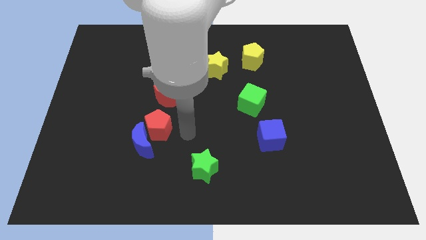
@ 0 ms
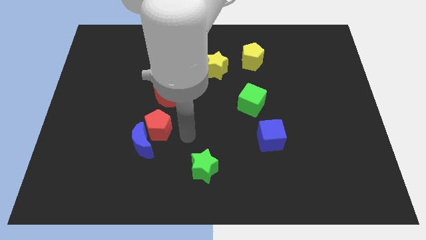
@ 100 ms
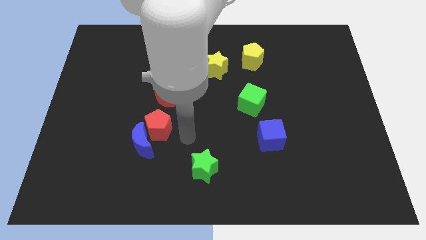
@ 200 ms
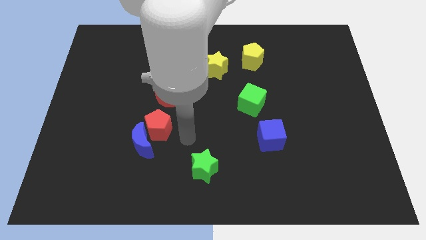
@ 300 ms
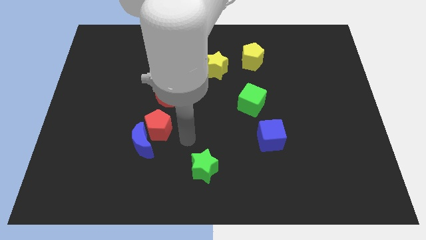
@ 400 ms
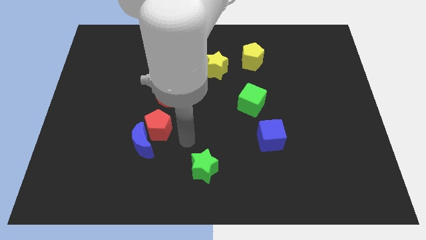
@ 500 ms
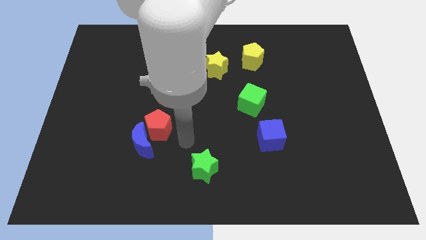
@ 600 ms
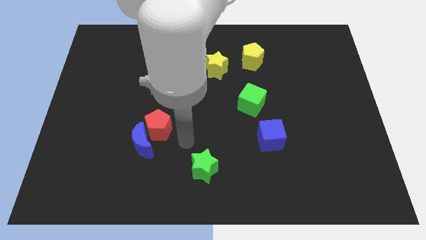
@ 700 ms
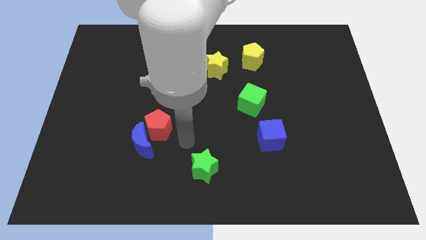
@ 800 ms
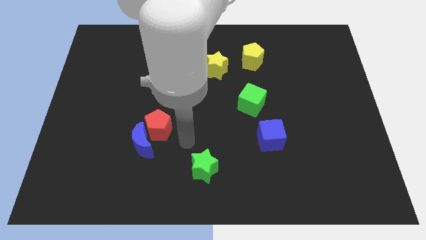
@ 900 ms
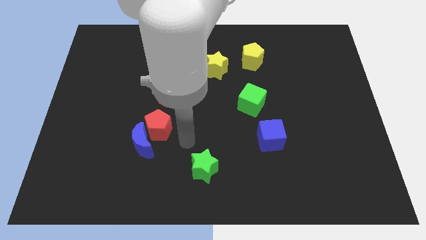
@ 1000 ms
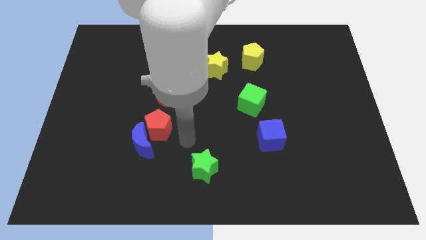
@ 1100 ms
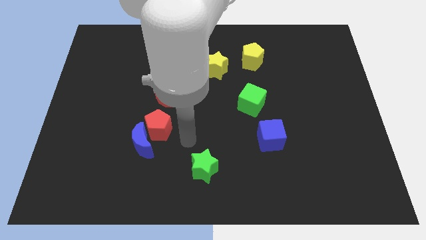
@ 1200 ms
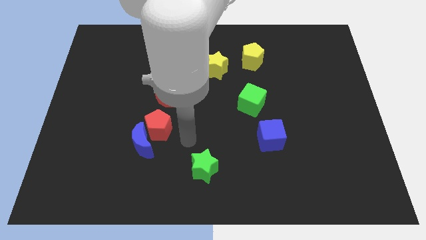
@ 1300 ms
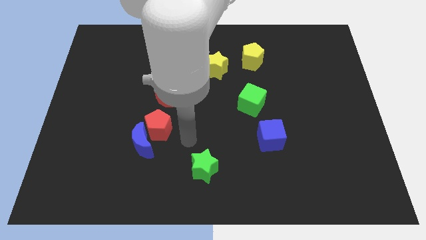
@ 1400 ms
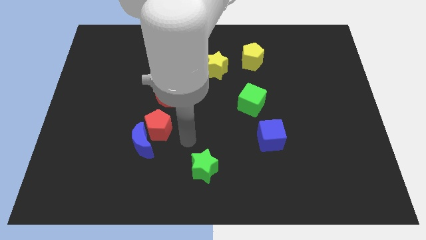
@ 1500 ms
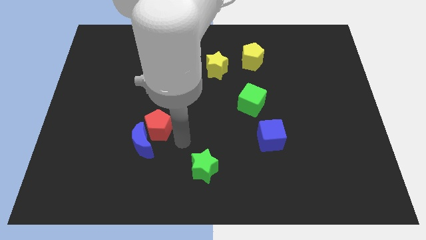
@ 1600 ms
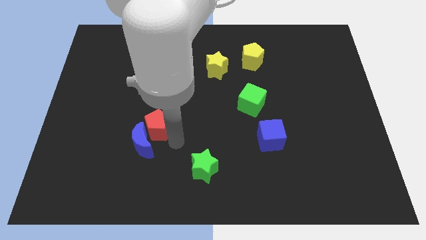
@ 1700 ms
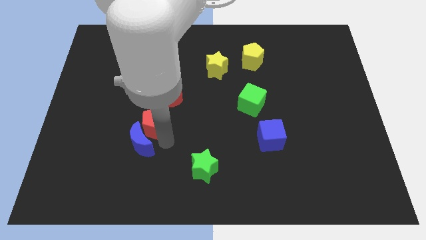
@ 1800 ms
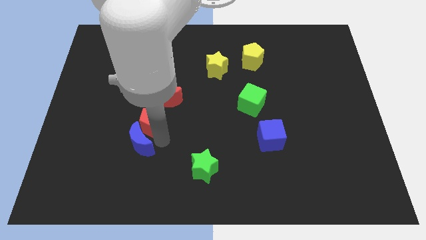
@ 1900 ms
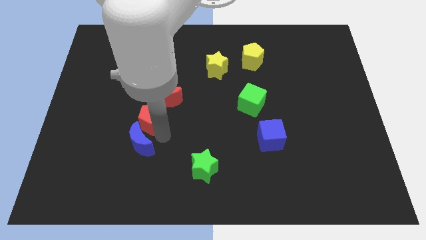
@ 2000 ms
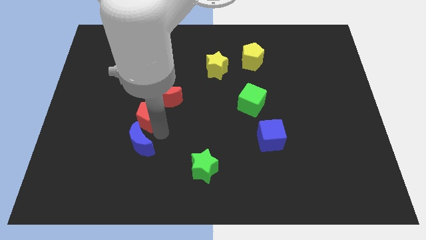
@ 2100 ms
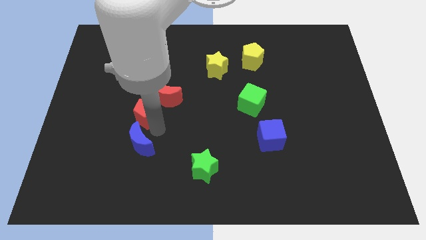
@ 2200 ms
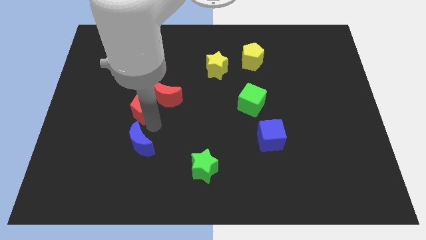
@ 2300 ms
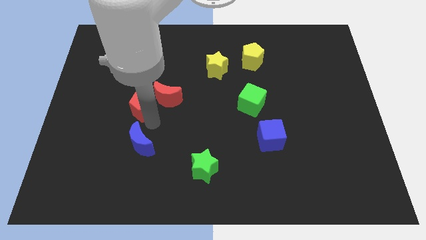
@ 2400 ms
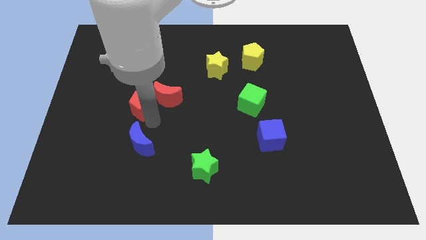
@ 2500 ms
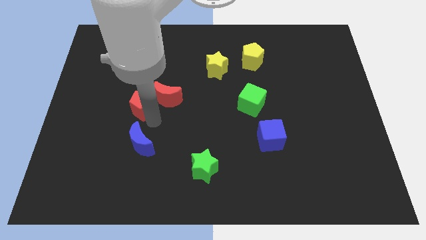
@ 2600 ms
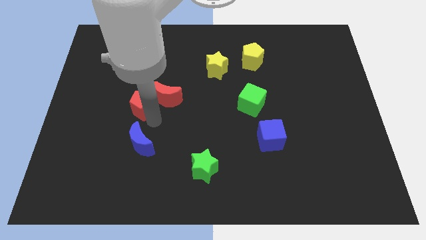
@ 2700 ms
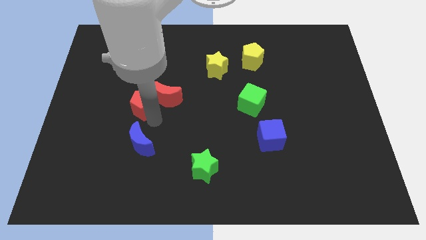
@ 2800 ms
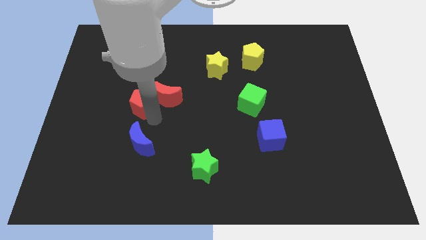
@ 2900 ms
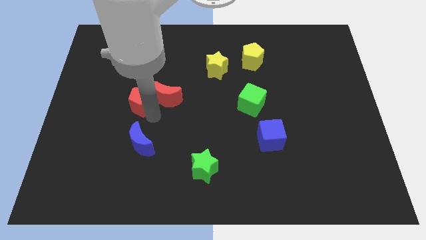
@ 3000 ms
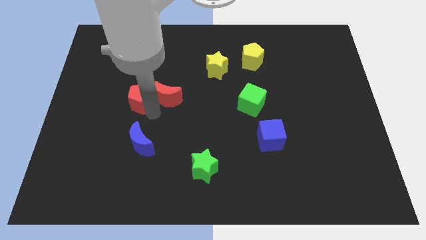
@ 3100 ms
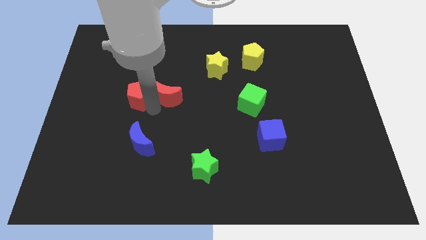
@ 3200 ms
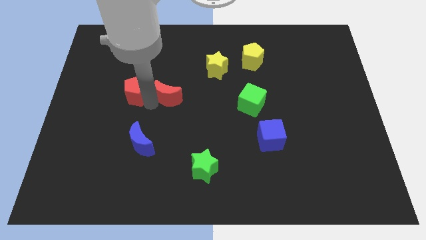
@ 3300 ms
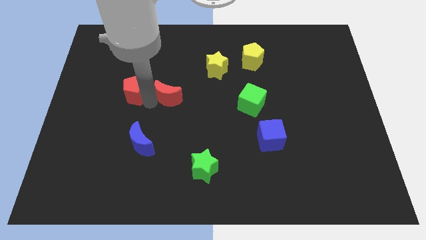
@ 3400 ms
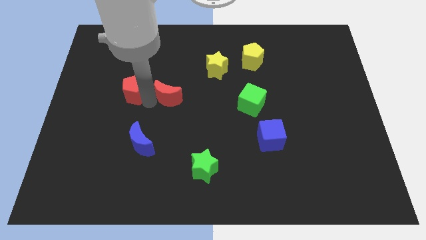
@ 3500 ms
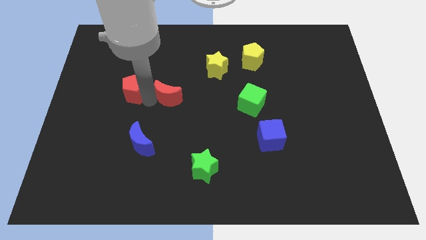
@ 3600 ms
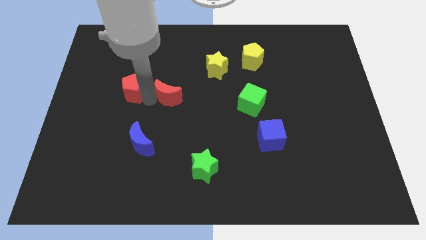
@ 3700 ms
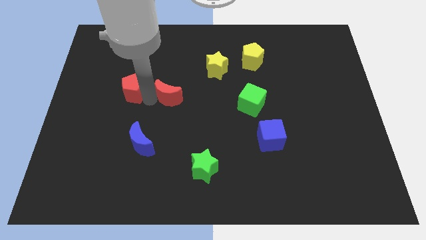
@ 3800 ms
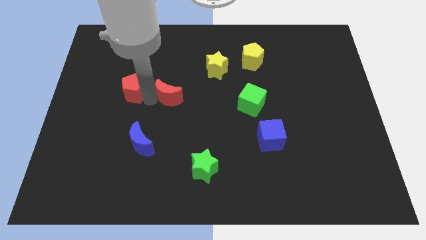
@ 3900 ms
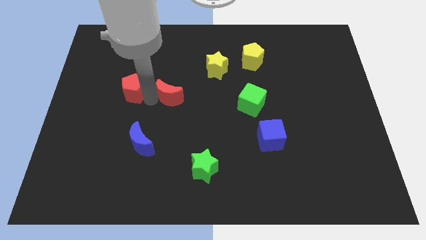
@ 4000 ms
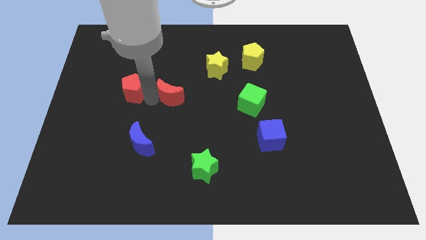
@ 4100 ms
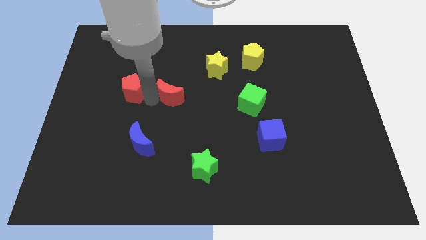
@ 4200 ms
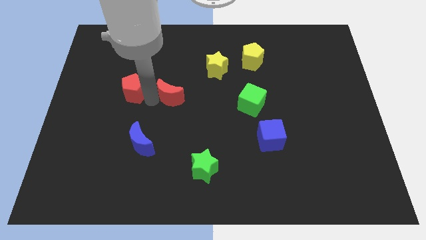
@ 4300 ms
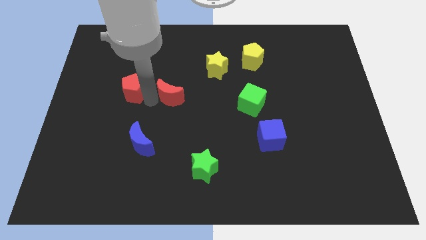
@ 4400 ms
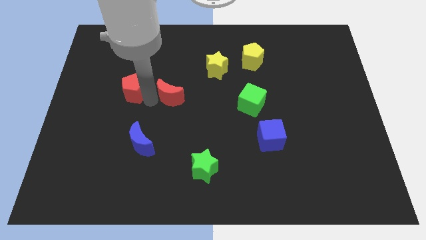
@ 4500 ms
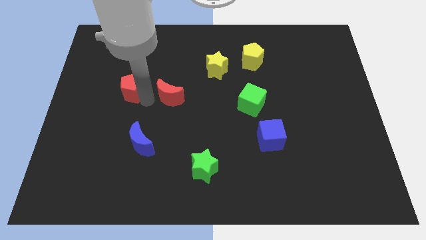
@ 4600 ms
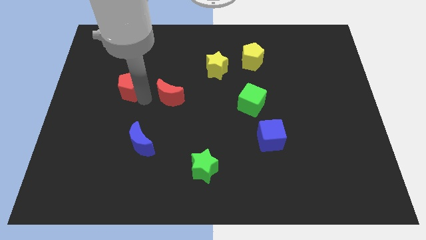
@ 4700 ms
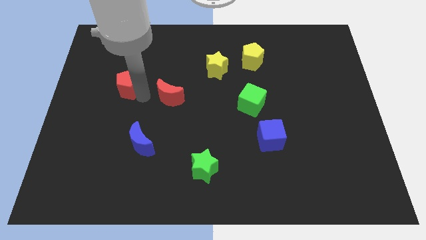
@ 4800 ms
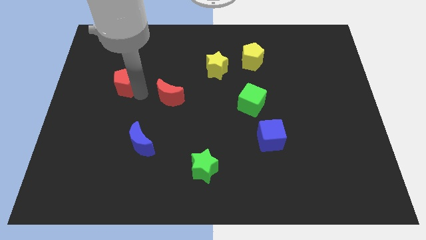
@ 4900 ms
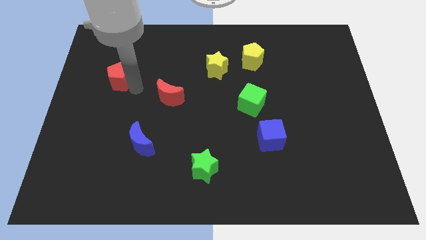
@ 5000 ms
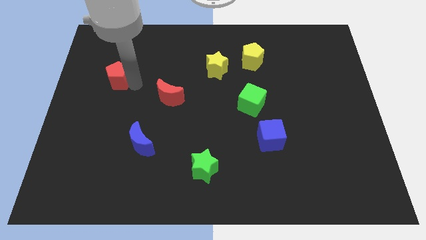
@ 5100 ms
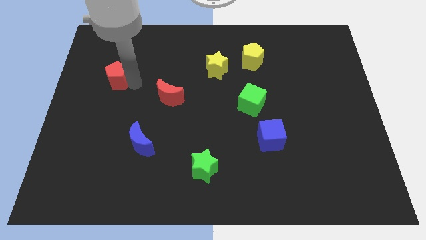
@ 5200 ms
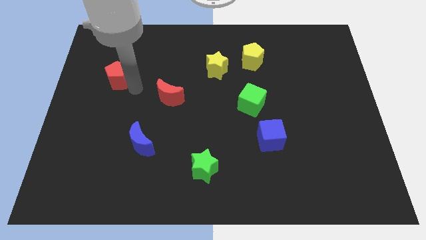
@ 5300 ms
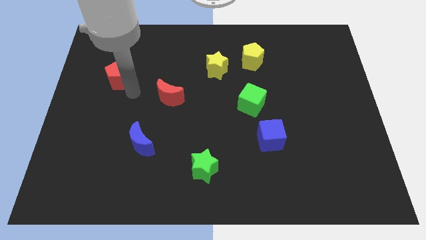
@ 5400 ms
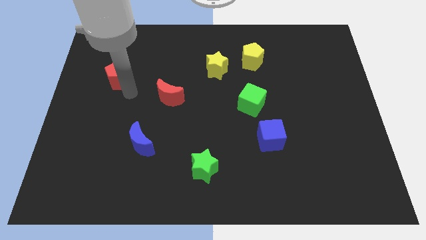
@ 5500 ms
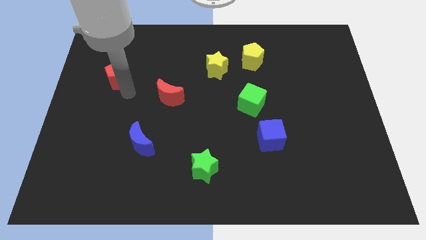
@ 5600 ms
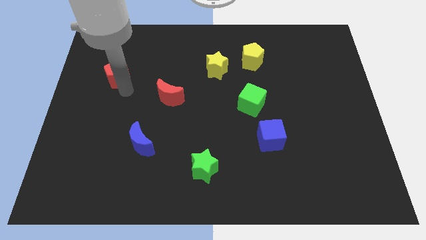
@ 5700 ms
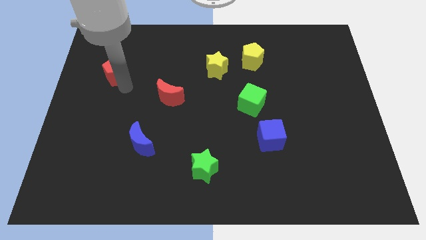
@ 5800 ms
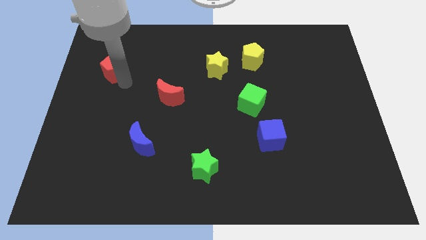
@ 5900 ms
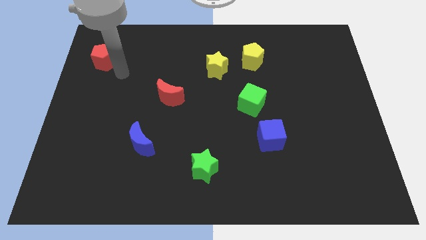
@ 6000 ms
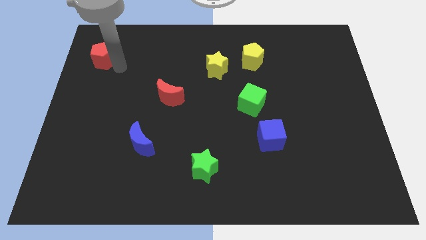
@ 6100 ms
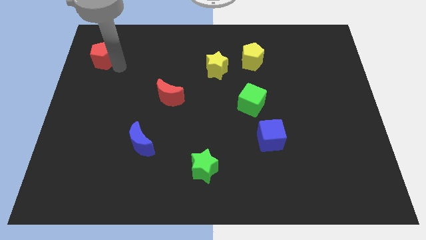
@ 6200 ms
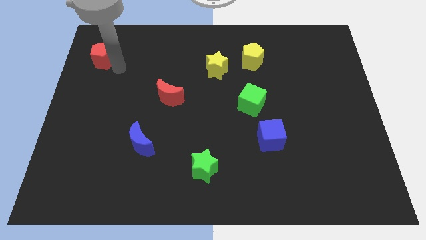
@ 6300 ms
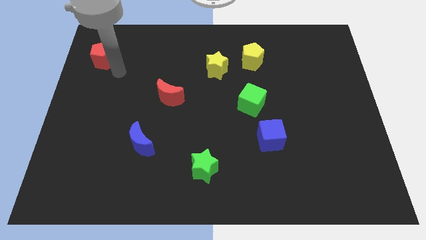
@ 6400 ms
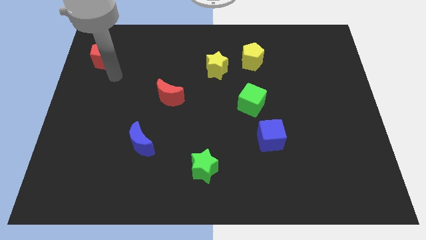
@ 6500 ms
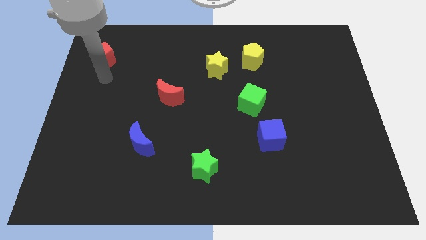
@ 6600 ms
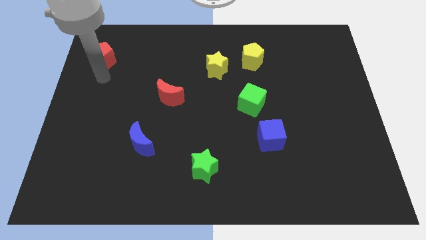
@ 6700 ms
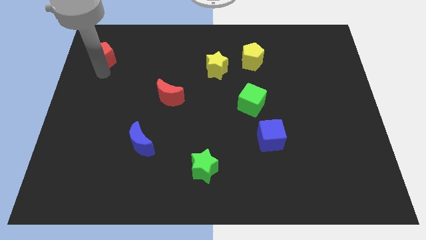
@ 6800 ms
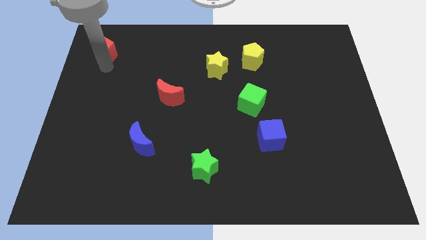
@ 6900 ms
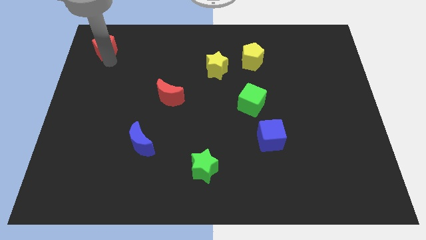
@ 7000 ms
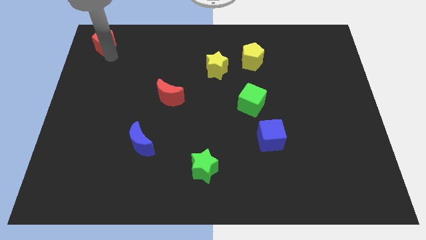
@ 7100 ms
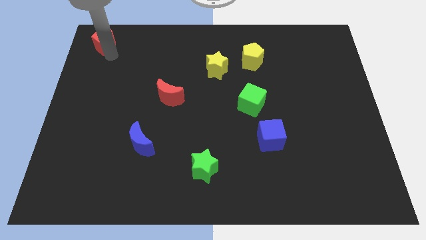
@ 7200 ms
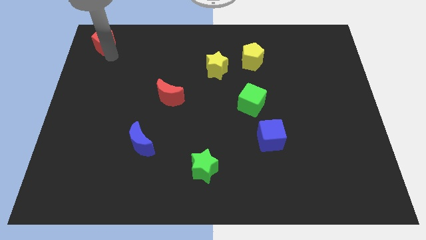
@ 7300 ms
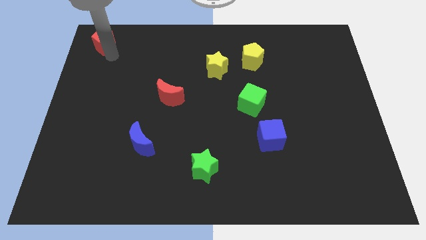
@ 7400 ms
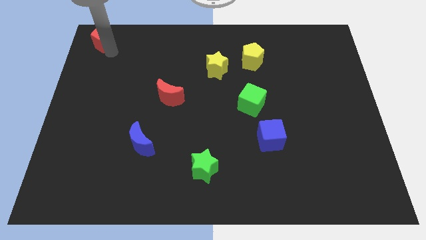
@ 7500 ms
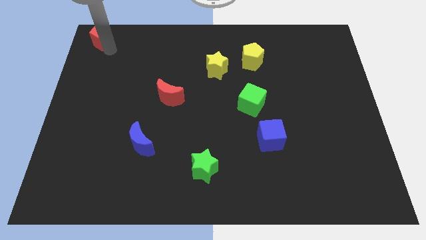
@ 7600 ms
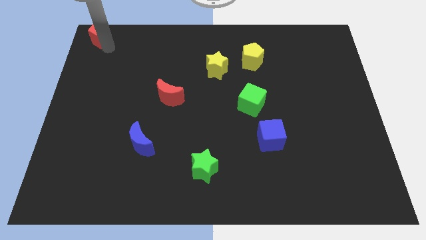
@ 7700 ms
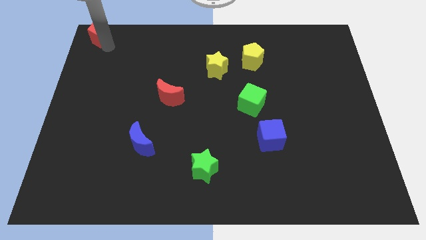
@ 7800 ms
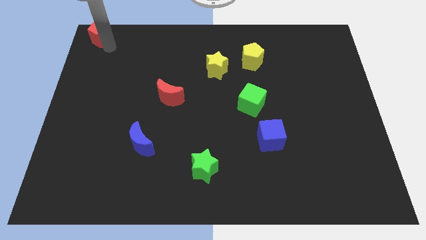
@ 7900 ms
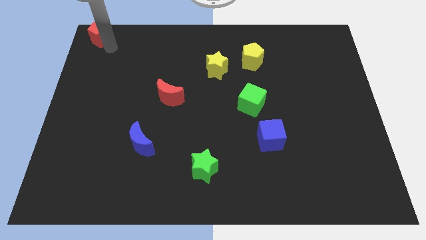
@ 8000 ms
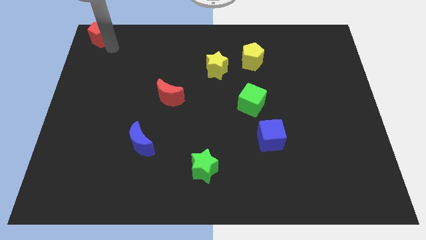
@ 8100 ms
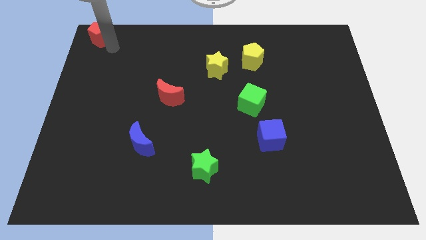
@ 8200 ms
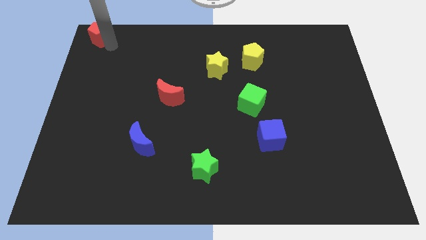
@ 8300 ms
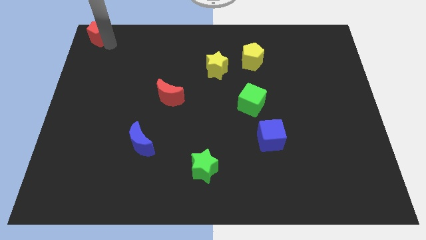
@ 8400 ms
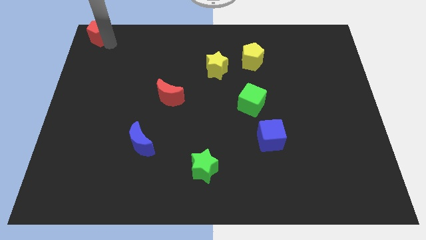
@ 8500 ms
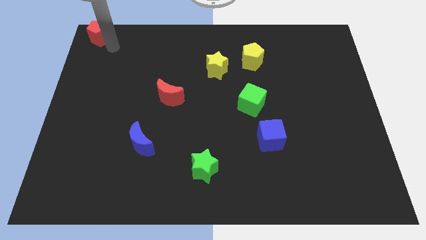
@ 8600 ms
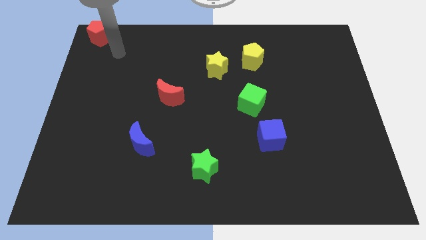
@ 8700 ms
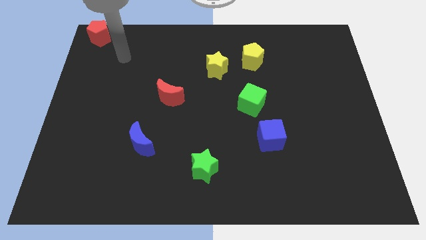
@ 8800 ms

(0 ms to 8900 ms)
push the red pentagon towards the top left corner of the board
